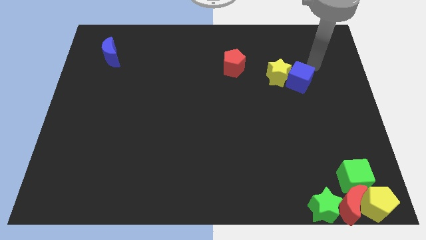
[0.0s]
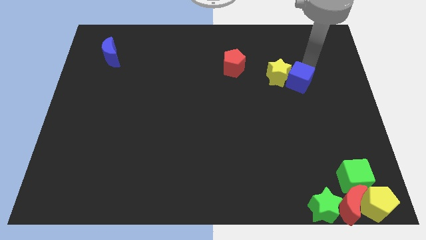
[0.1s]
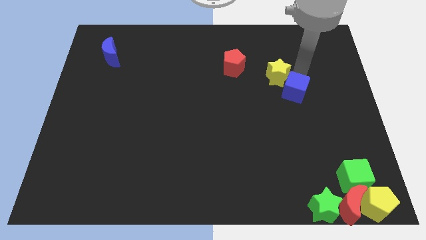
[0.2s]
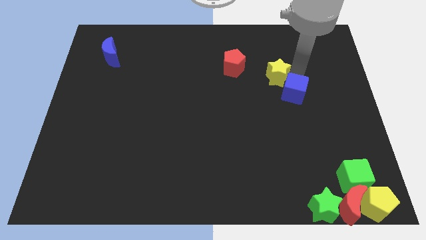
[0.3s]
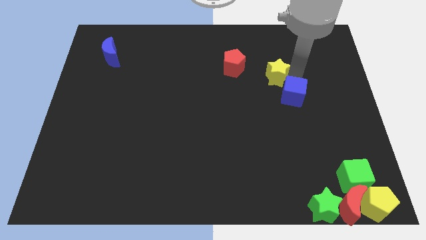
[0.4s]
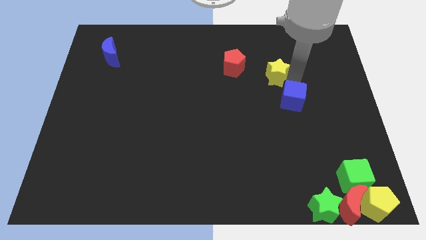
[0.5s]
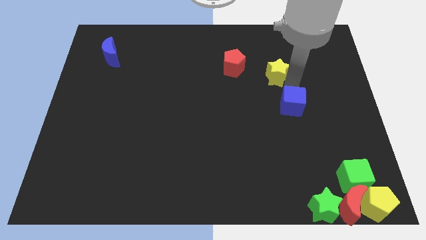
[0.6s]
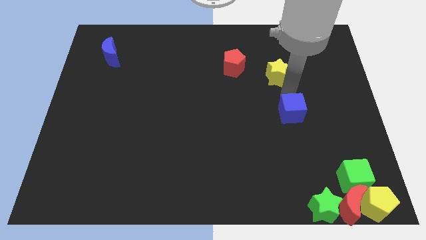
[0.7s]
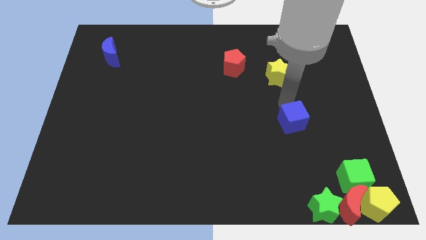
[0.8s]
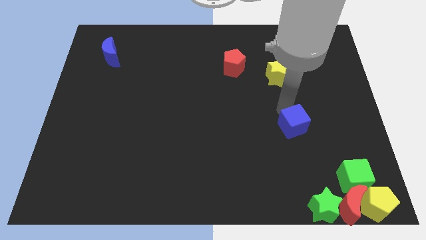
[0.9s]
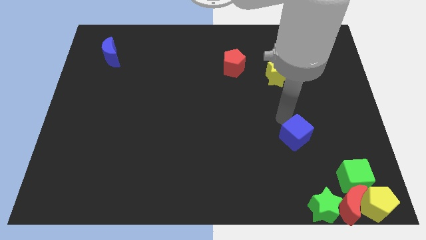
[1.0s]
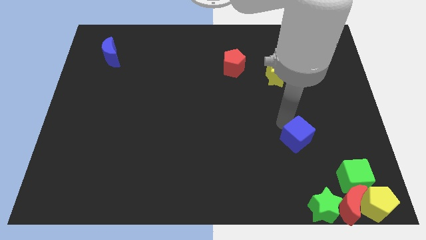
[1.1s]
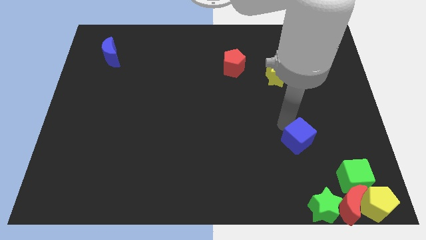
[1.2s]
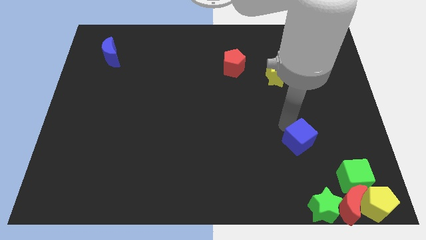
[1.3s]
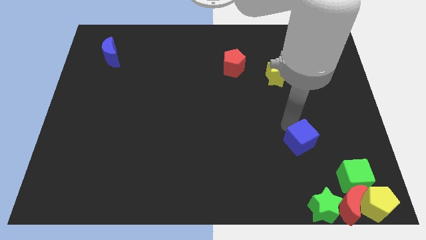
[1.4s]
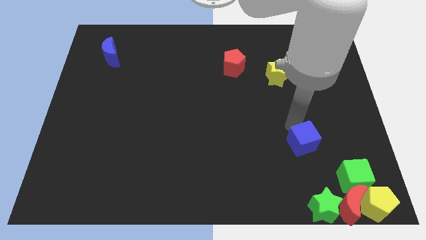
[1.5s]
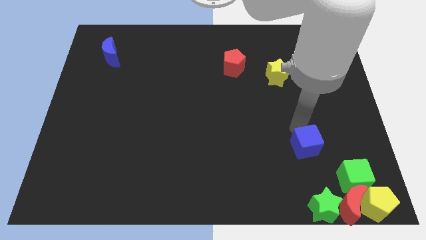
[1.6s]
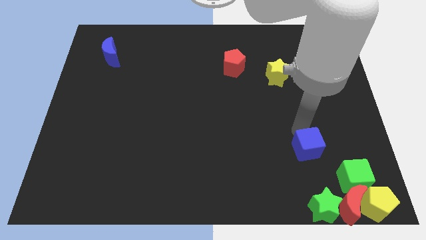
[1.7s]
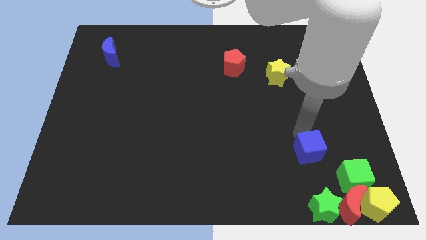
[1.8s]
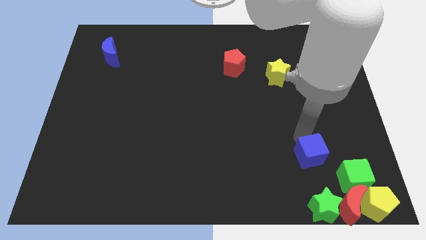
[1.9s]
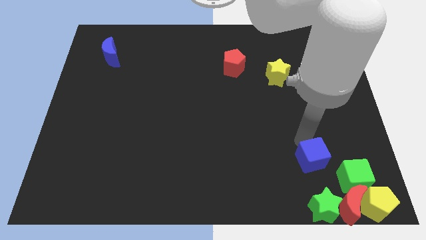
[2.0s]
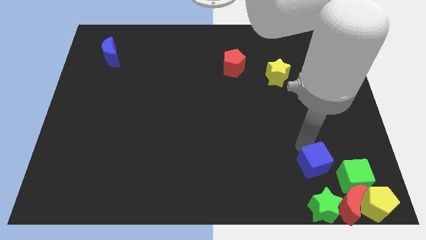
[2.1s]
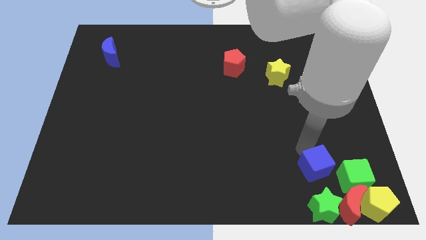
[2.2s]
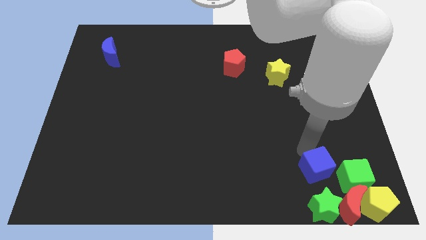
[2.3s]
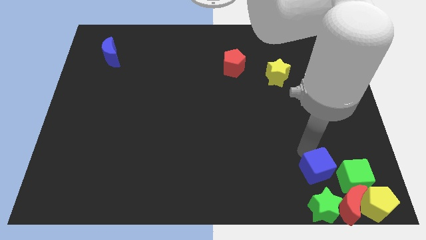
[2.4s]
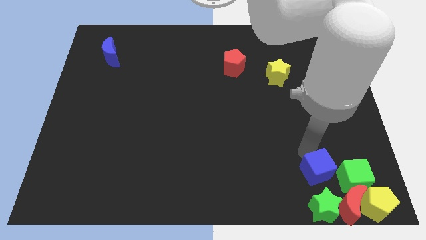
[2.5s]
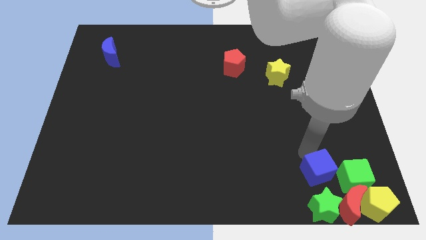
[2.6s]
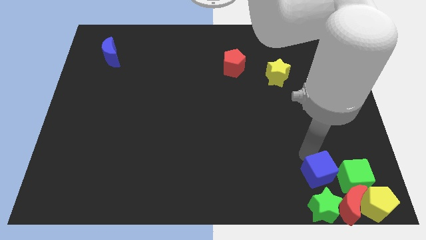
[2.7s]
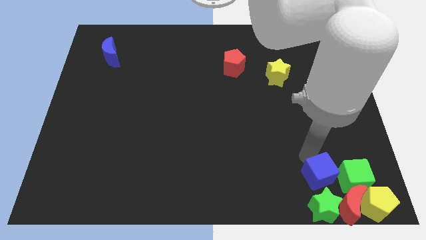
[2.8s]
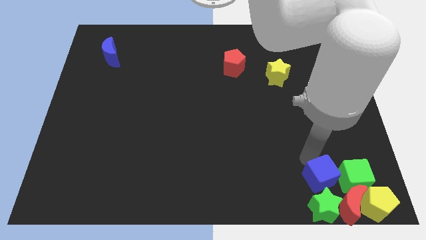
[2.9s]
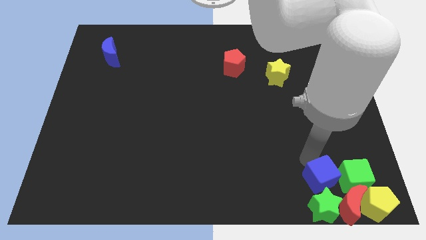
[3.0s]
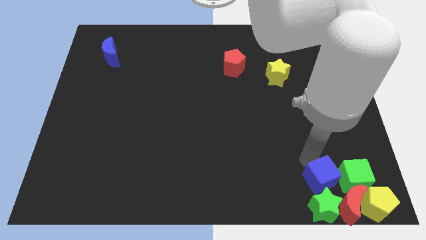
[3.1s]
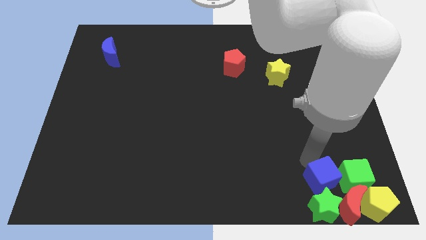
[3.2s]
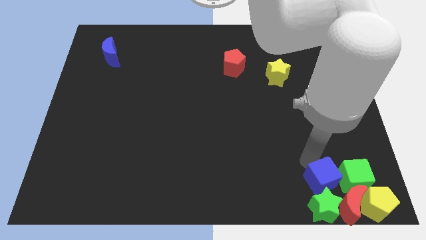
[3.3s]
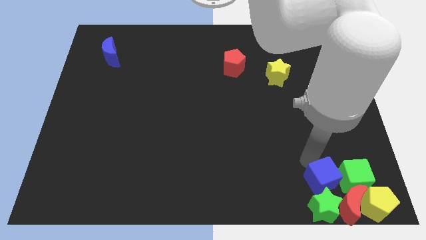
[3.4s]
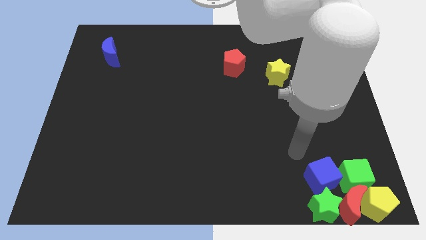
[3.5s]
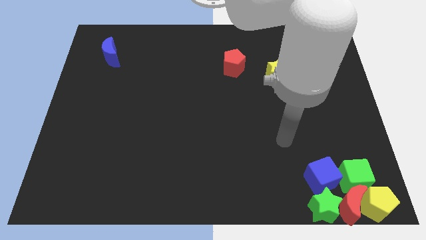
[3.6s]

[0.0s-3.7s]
place the blue cube above the green star

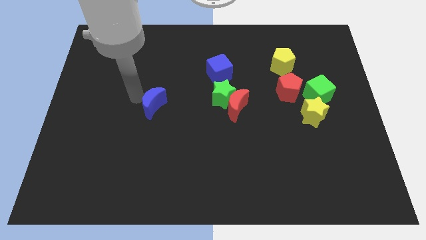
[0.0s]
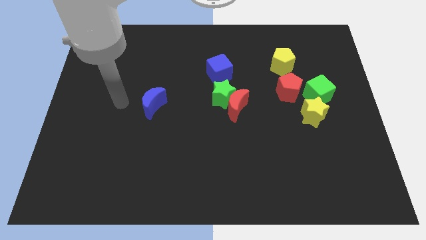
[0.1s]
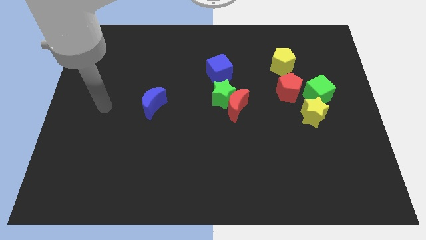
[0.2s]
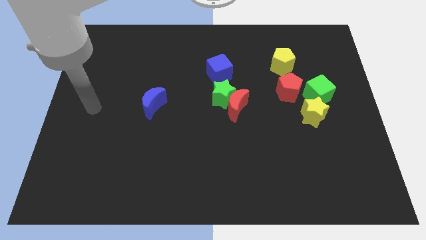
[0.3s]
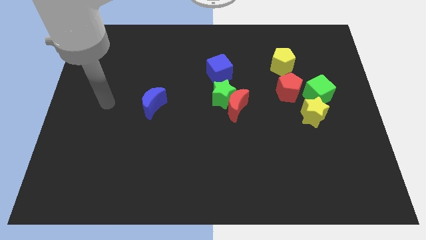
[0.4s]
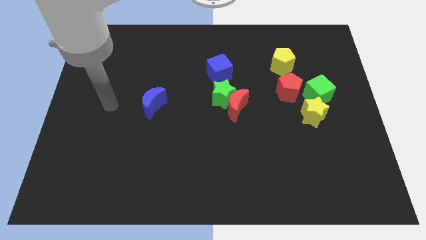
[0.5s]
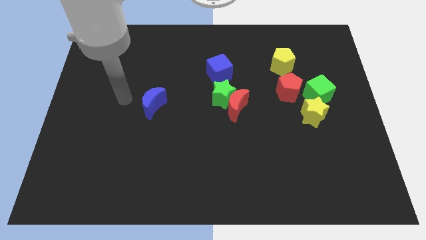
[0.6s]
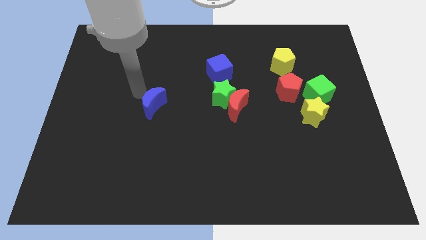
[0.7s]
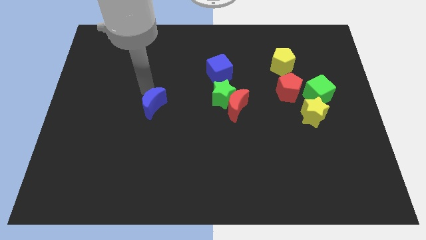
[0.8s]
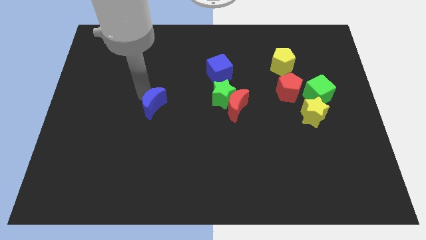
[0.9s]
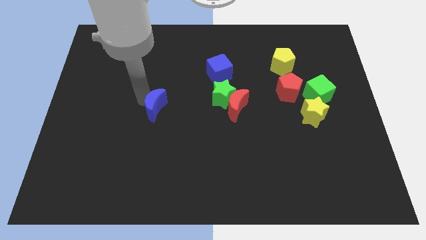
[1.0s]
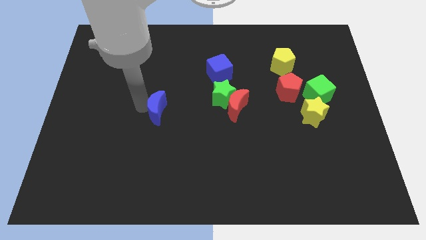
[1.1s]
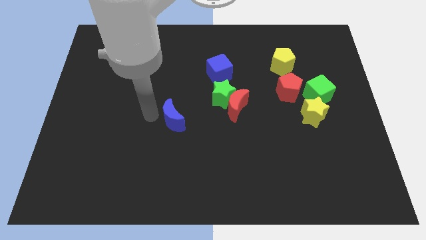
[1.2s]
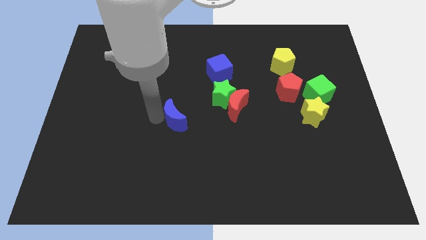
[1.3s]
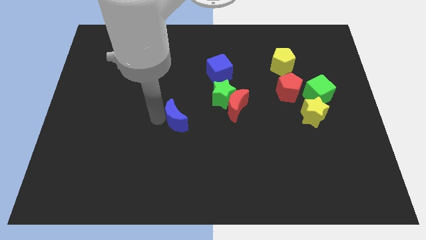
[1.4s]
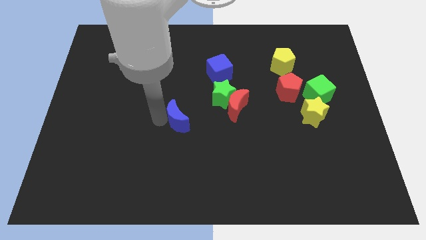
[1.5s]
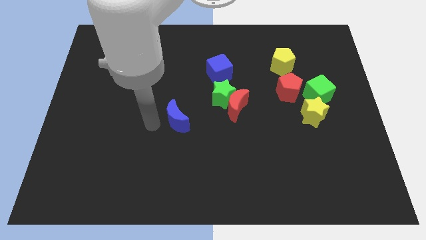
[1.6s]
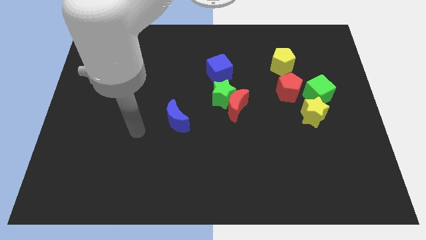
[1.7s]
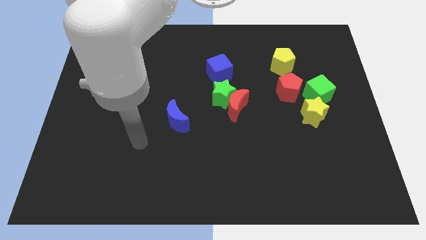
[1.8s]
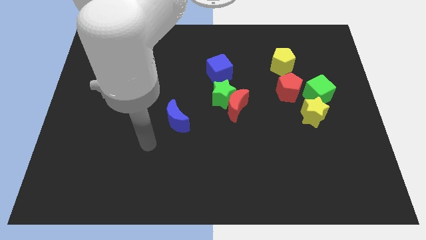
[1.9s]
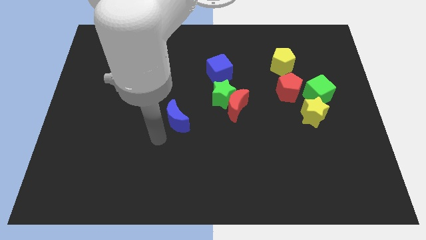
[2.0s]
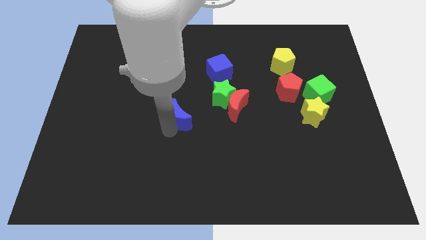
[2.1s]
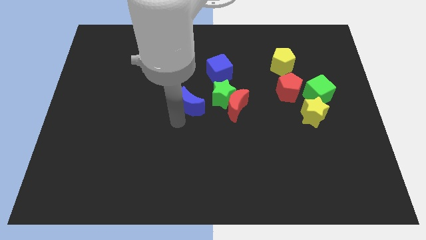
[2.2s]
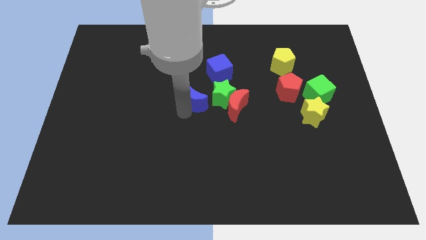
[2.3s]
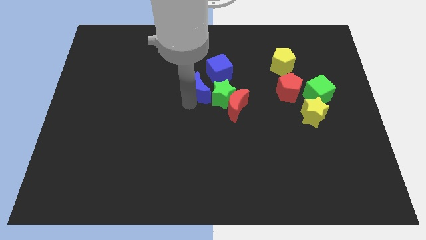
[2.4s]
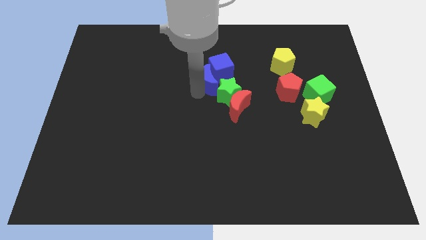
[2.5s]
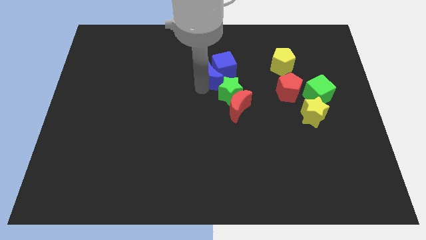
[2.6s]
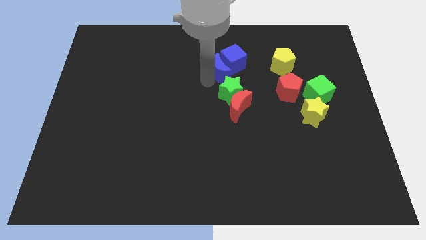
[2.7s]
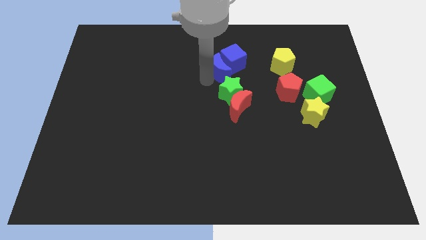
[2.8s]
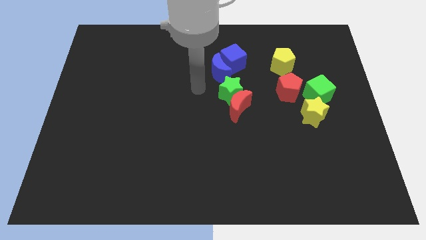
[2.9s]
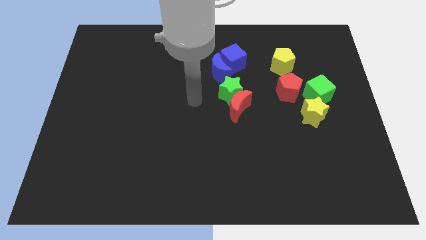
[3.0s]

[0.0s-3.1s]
push the blue crescent into the left side of the blue cube

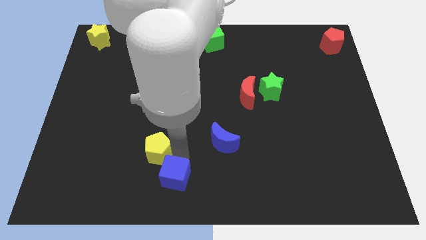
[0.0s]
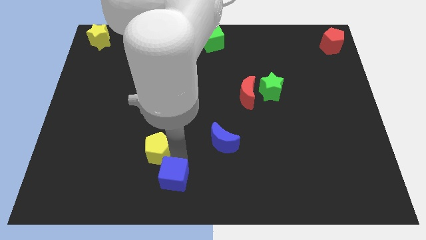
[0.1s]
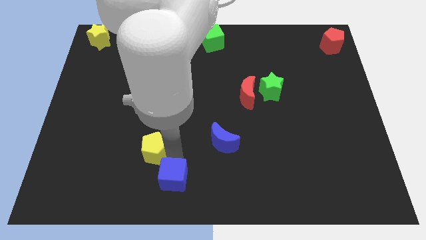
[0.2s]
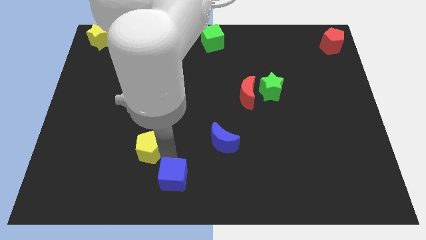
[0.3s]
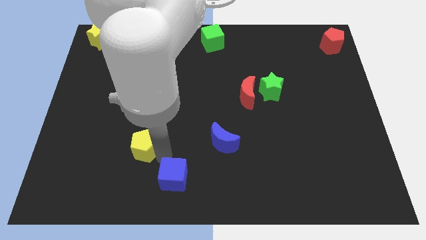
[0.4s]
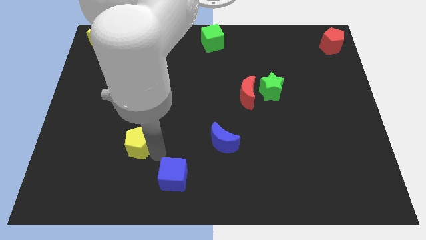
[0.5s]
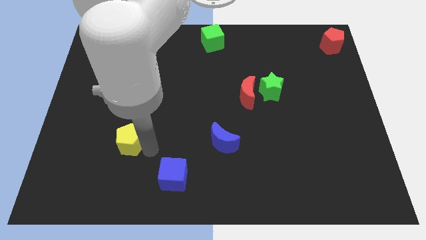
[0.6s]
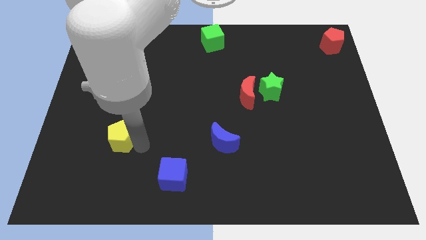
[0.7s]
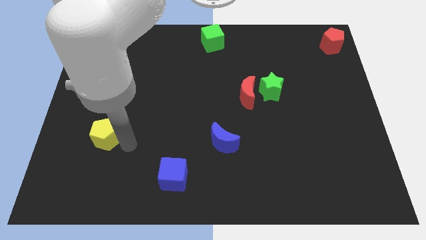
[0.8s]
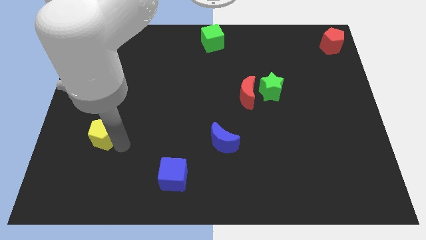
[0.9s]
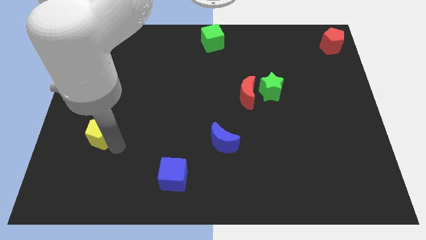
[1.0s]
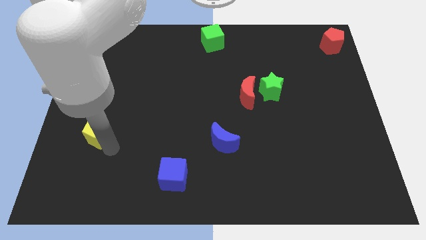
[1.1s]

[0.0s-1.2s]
separate the blue cube and the yellow pentagon

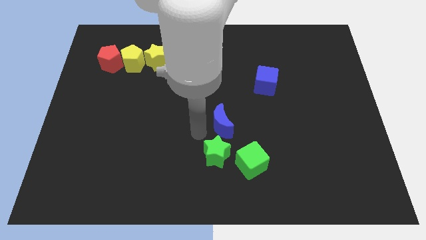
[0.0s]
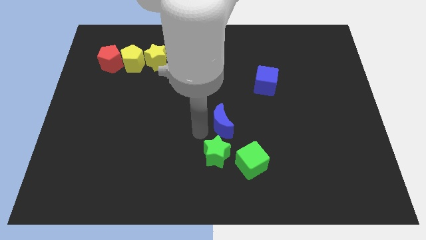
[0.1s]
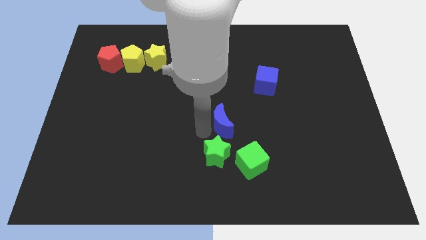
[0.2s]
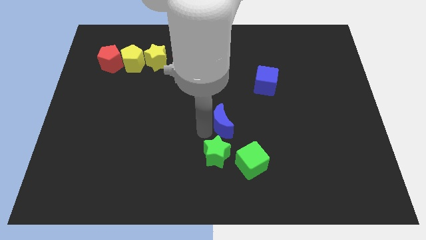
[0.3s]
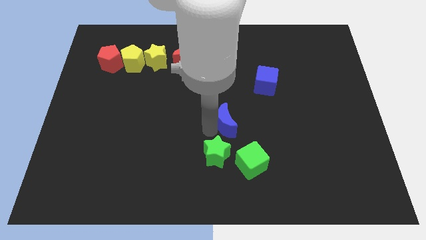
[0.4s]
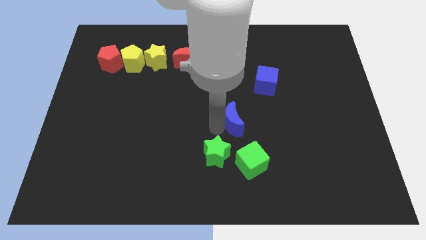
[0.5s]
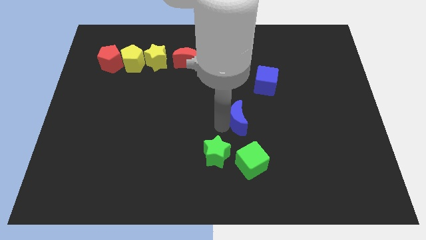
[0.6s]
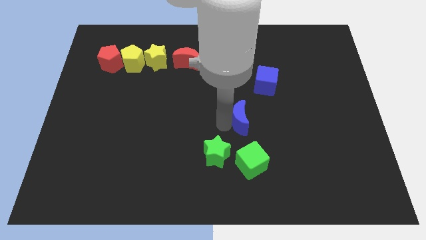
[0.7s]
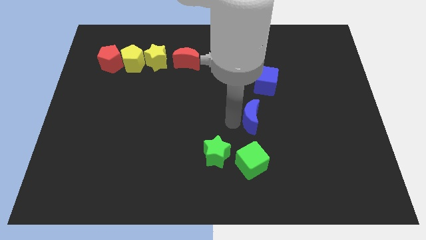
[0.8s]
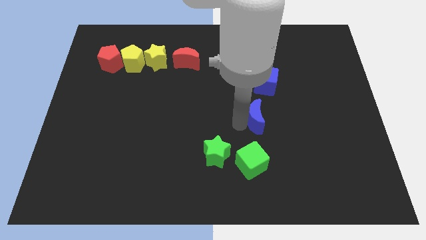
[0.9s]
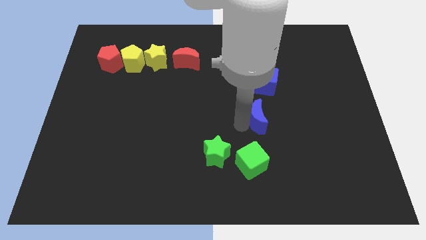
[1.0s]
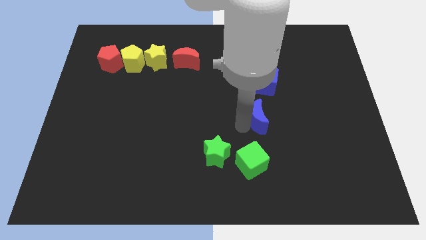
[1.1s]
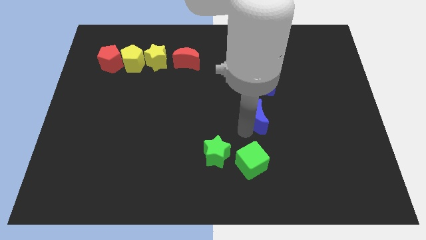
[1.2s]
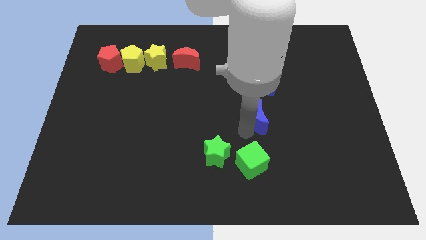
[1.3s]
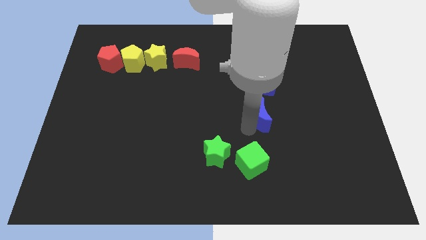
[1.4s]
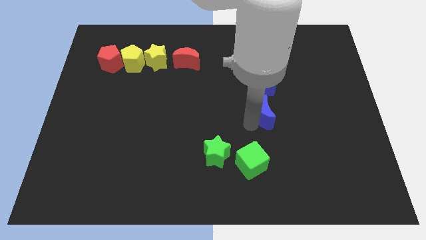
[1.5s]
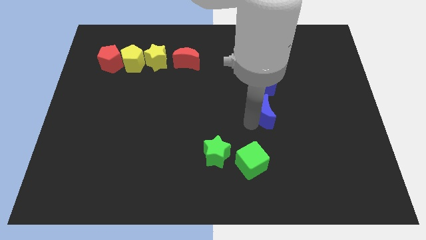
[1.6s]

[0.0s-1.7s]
place blue half moon below the blue cube
